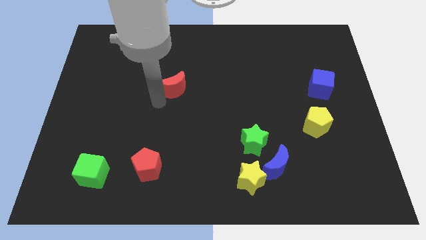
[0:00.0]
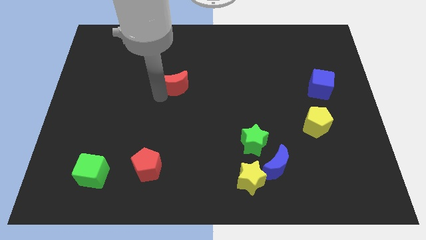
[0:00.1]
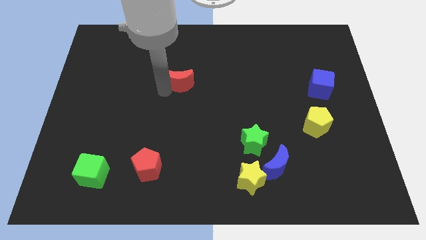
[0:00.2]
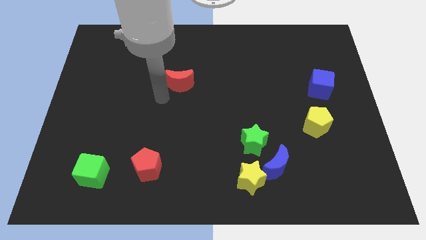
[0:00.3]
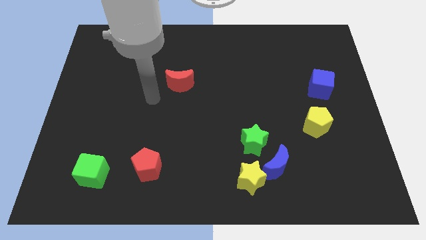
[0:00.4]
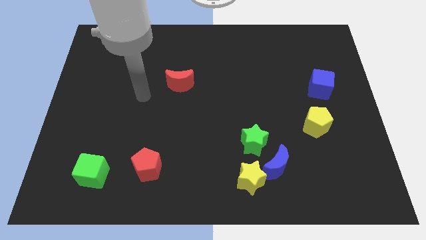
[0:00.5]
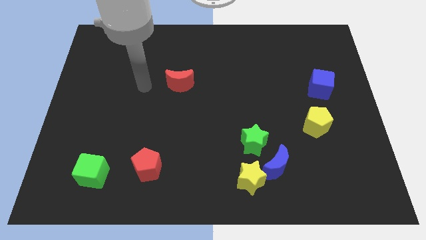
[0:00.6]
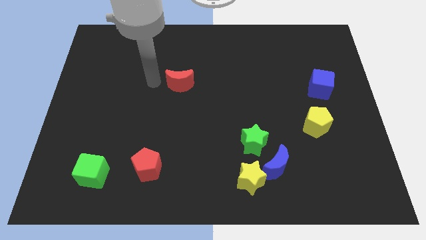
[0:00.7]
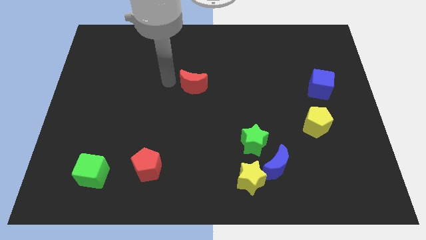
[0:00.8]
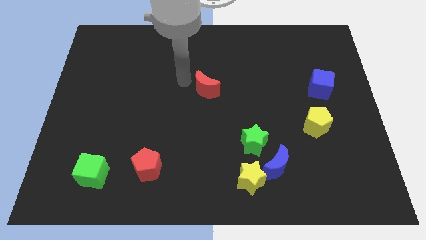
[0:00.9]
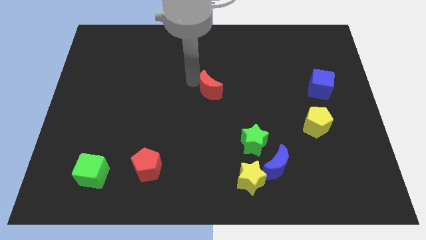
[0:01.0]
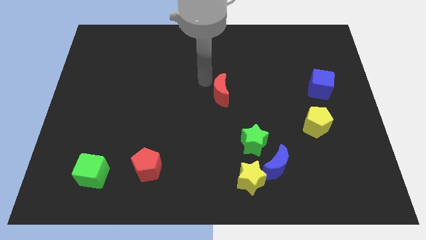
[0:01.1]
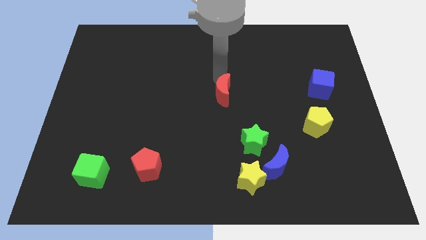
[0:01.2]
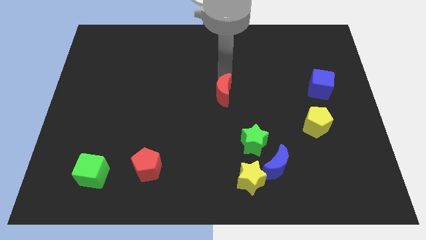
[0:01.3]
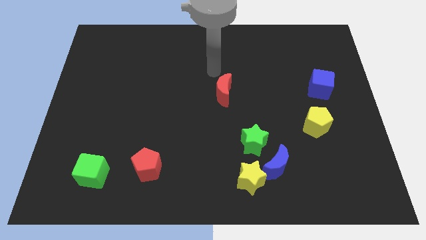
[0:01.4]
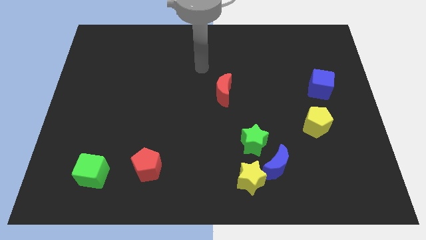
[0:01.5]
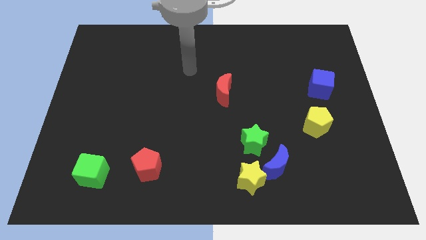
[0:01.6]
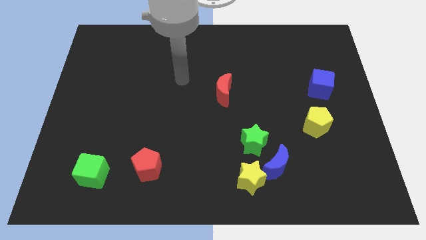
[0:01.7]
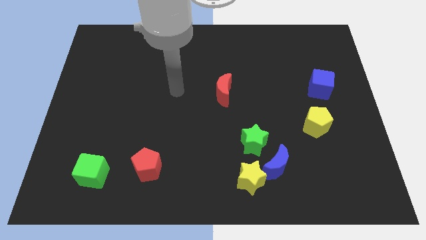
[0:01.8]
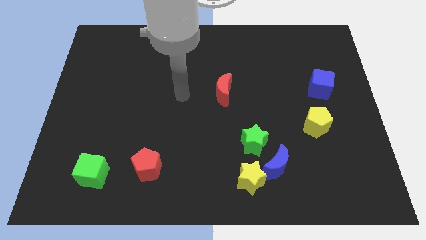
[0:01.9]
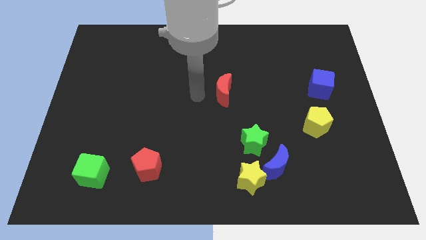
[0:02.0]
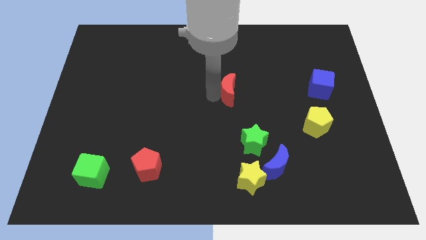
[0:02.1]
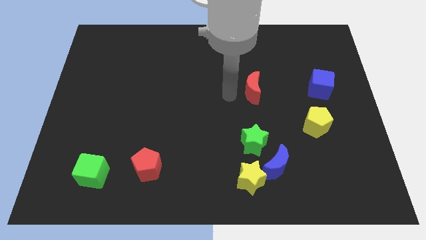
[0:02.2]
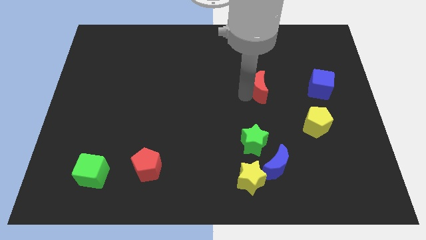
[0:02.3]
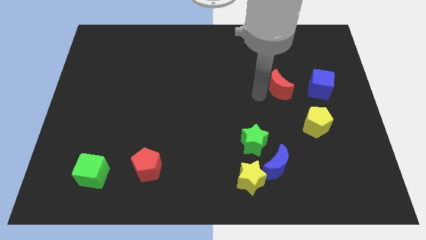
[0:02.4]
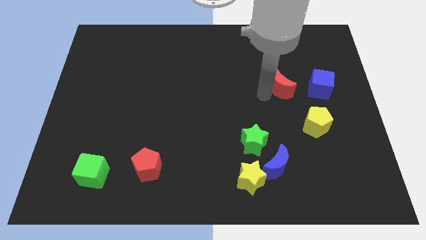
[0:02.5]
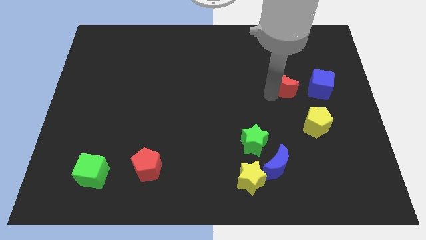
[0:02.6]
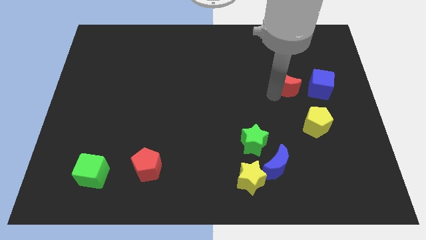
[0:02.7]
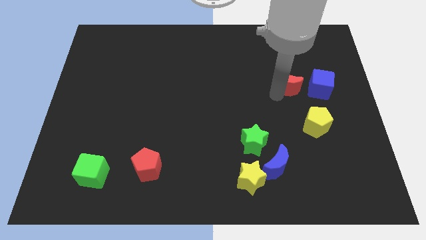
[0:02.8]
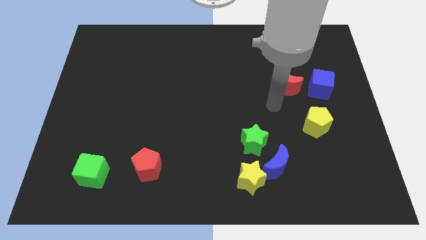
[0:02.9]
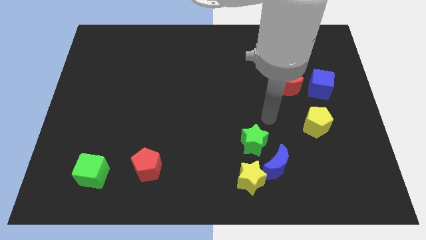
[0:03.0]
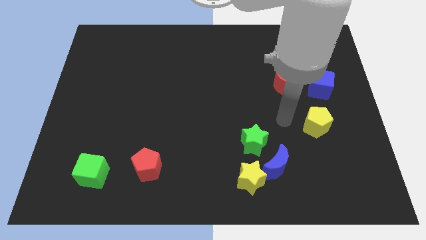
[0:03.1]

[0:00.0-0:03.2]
move the red crescent towards the blue cube

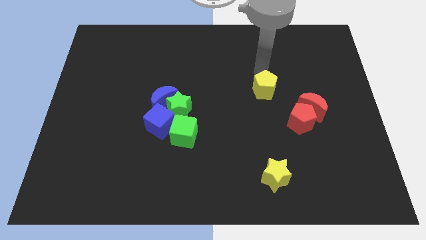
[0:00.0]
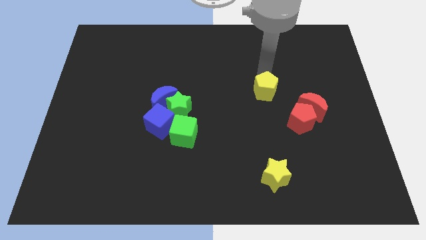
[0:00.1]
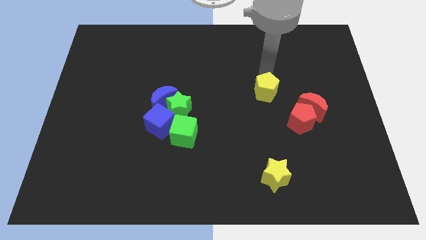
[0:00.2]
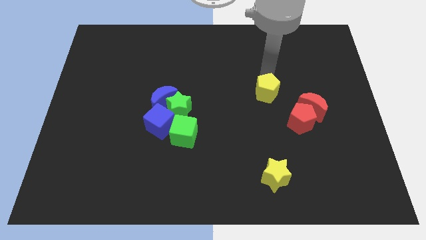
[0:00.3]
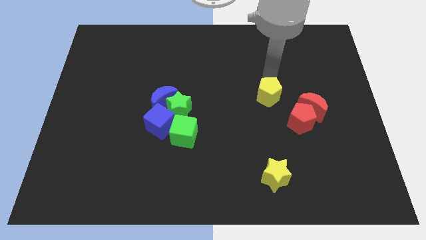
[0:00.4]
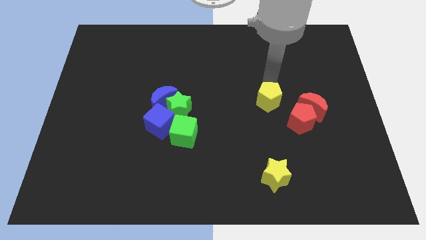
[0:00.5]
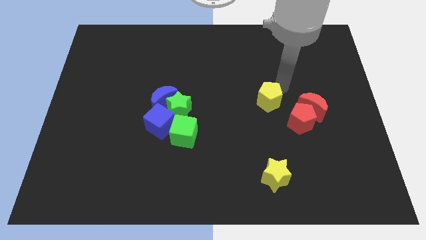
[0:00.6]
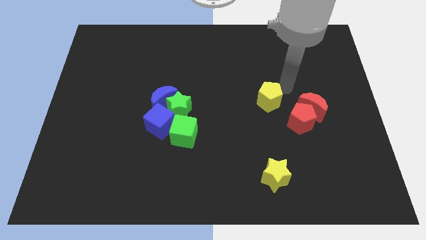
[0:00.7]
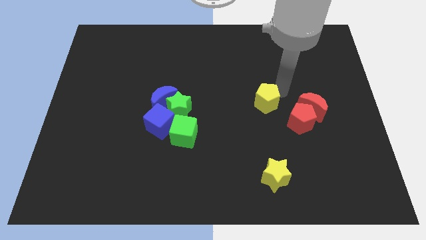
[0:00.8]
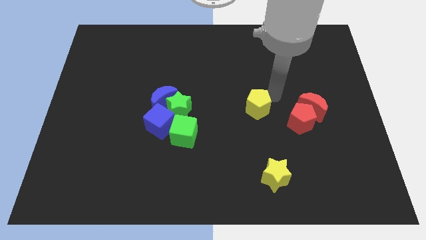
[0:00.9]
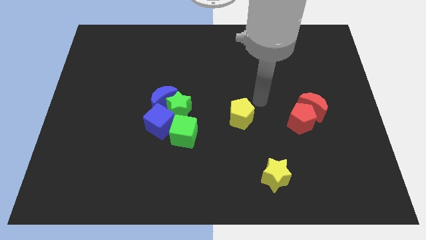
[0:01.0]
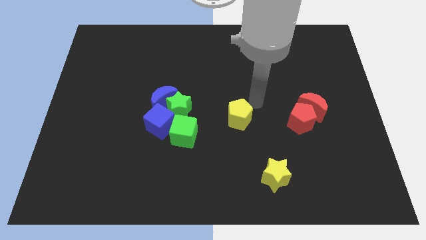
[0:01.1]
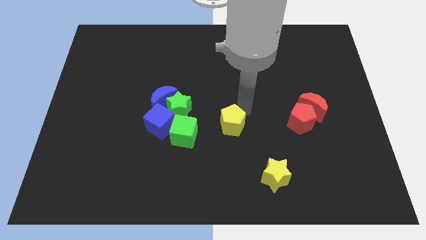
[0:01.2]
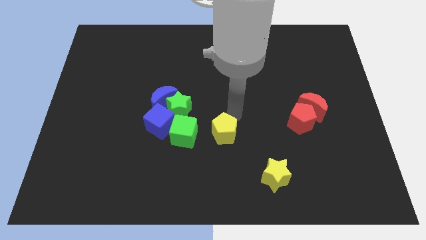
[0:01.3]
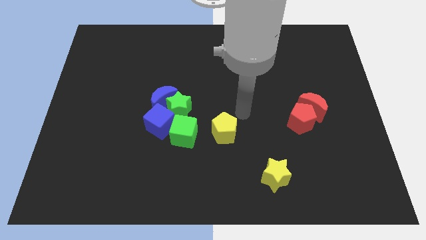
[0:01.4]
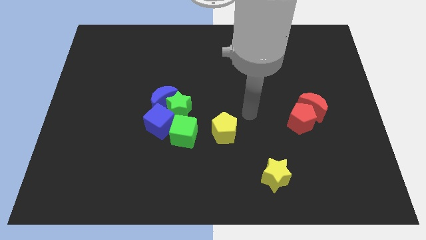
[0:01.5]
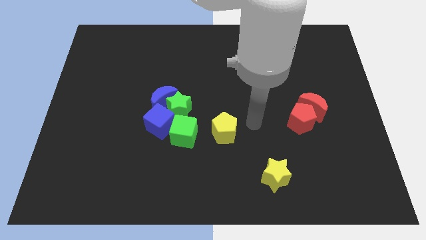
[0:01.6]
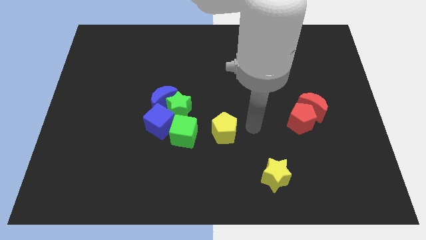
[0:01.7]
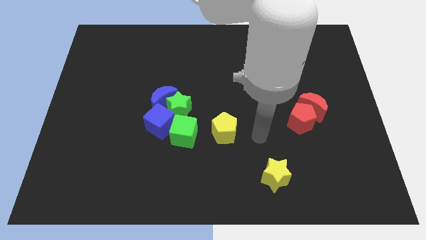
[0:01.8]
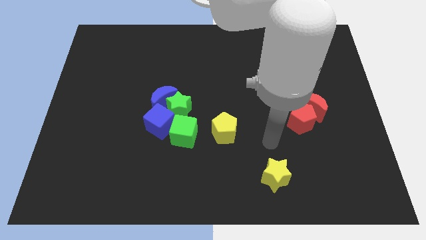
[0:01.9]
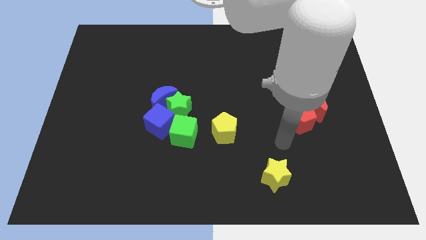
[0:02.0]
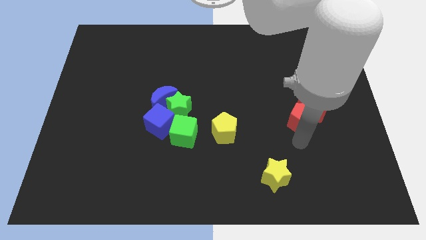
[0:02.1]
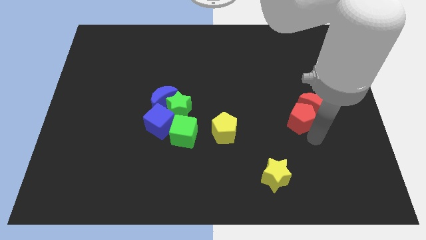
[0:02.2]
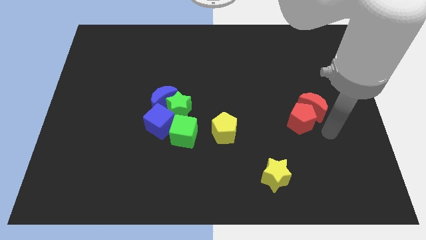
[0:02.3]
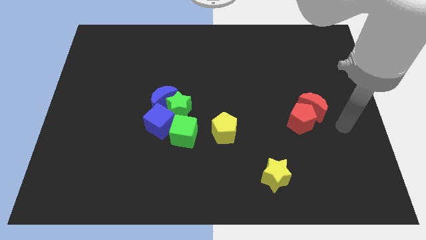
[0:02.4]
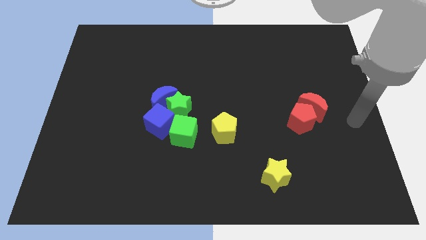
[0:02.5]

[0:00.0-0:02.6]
place the yellow pentagon to the right of the green cube

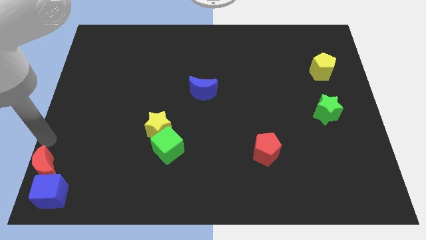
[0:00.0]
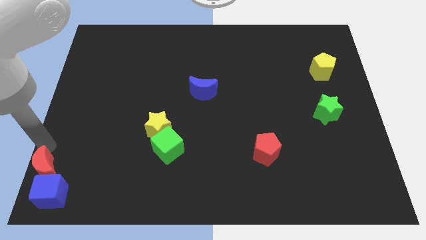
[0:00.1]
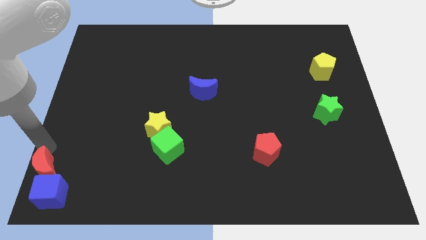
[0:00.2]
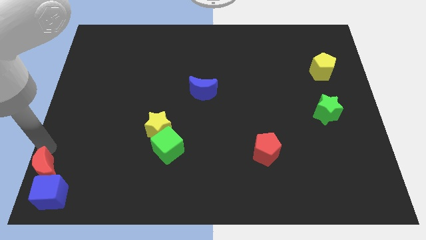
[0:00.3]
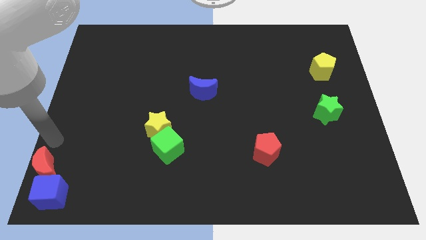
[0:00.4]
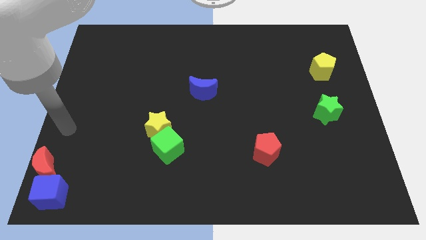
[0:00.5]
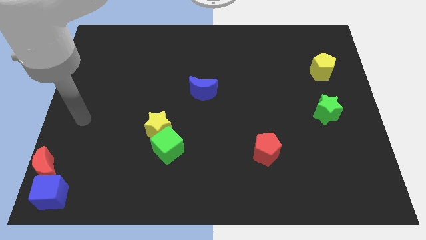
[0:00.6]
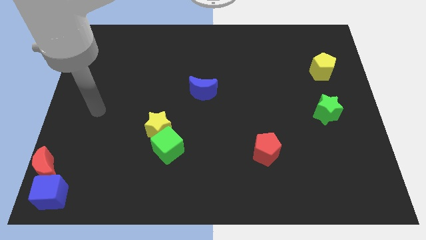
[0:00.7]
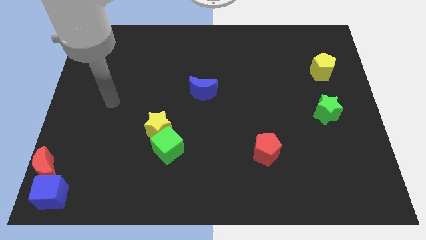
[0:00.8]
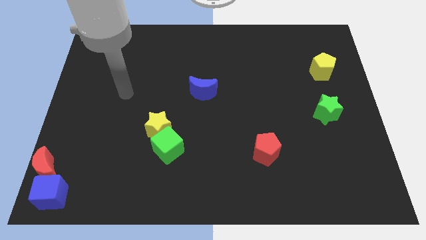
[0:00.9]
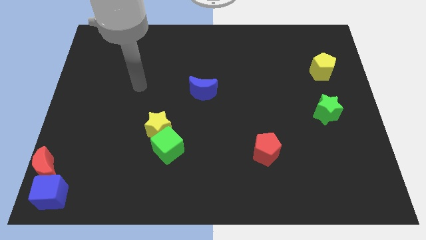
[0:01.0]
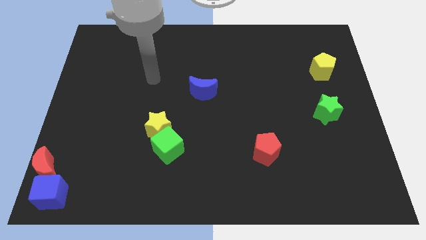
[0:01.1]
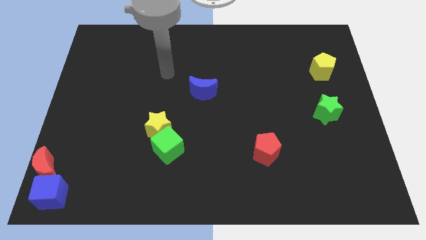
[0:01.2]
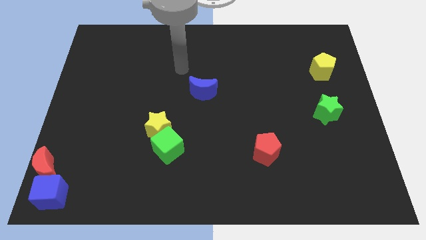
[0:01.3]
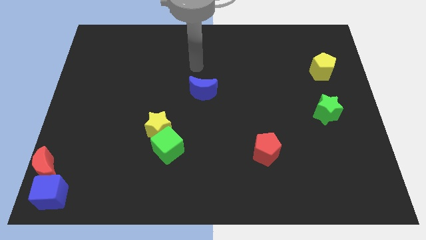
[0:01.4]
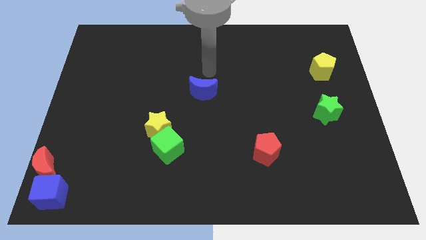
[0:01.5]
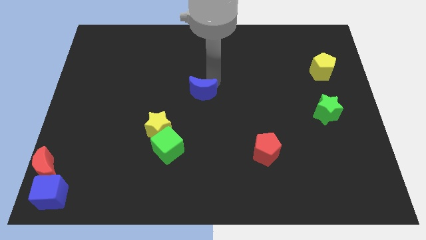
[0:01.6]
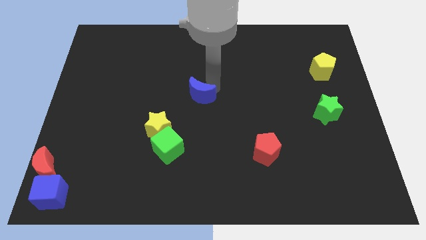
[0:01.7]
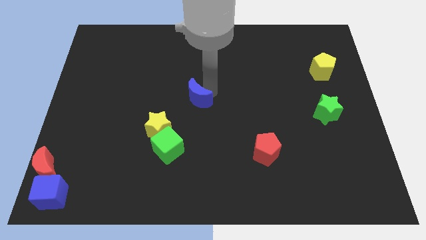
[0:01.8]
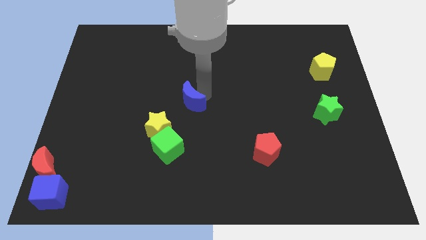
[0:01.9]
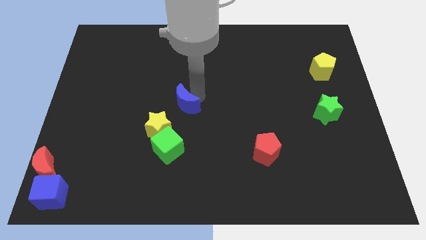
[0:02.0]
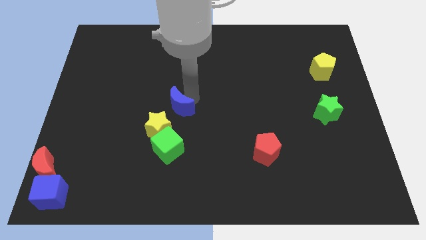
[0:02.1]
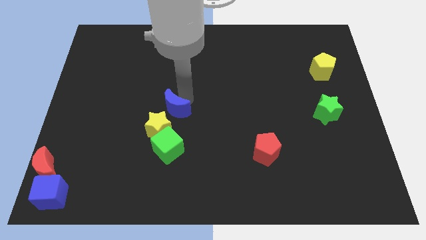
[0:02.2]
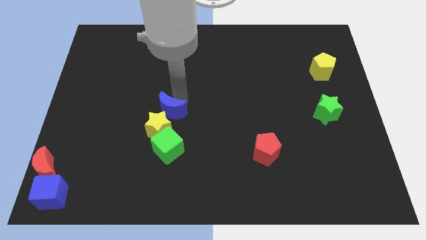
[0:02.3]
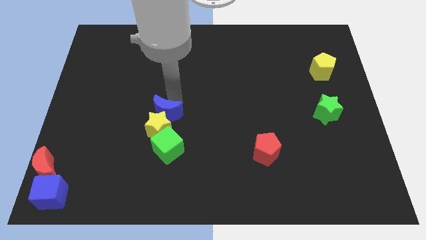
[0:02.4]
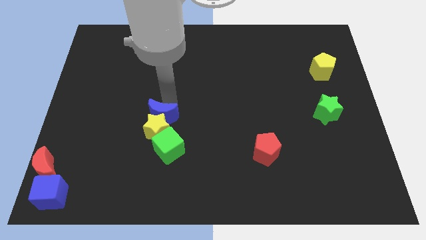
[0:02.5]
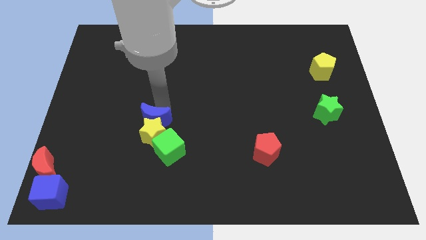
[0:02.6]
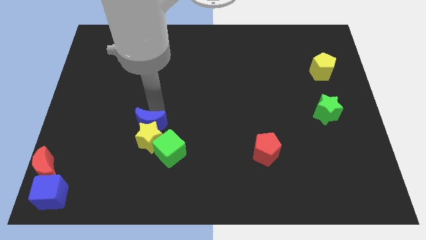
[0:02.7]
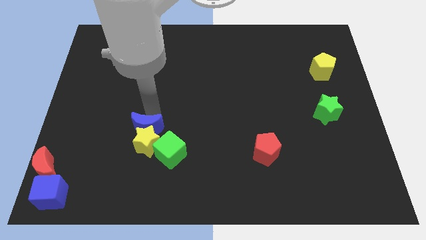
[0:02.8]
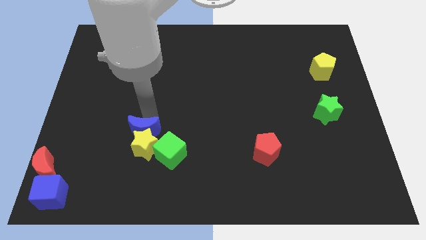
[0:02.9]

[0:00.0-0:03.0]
push the blue moon into the top of the yellow star

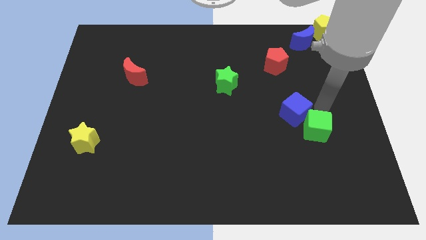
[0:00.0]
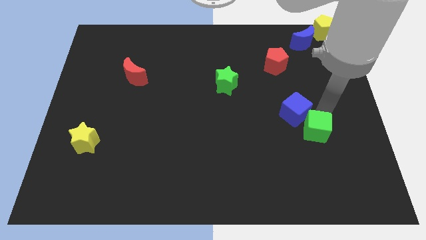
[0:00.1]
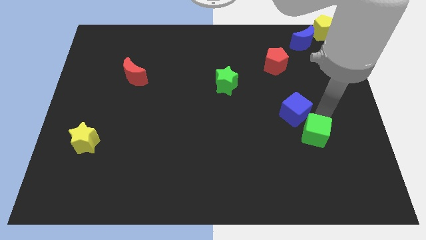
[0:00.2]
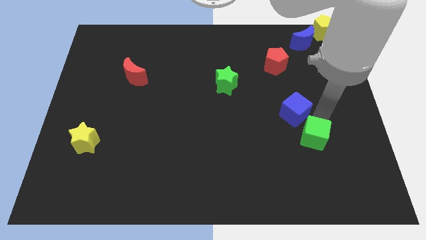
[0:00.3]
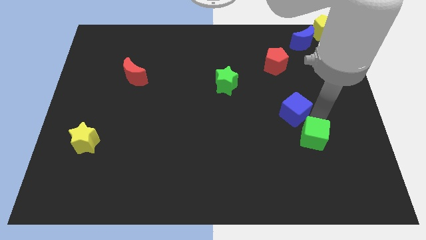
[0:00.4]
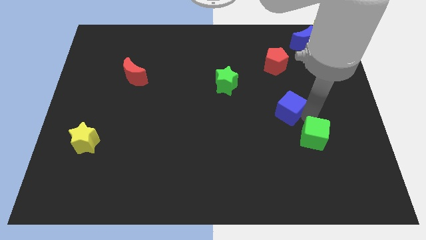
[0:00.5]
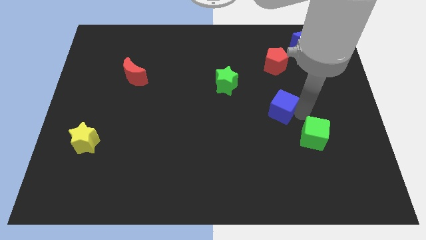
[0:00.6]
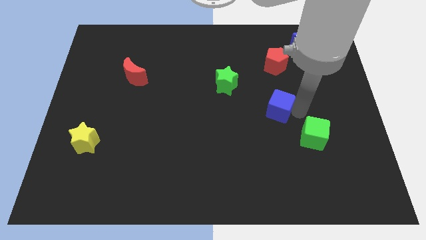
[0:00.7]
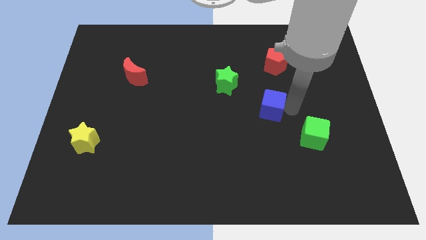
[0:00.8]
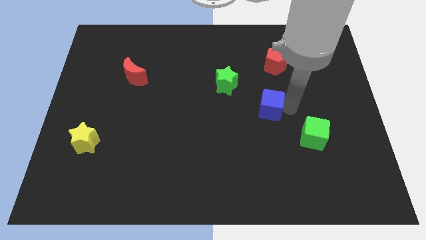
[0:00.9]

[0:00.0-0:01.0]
place blue cube to the bottom of red pentagon
